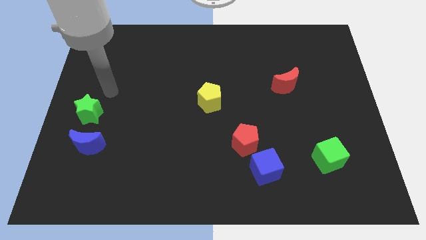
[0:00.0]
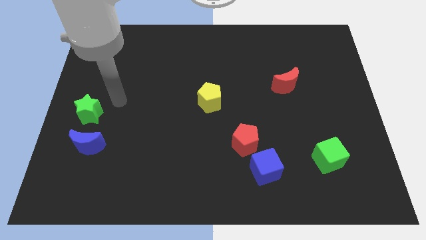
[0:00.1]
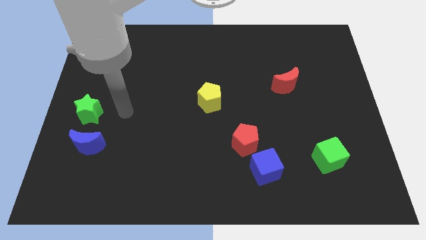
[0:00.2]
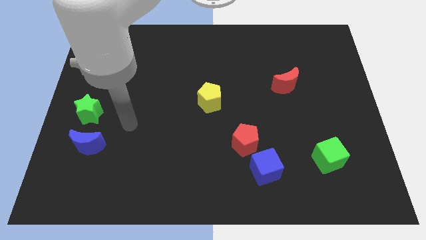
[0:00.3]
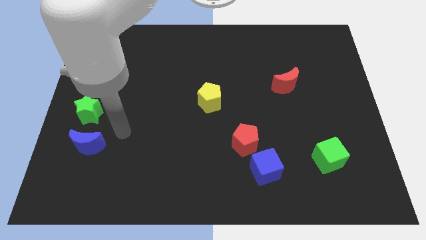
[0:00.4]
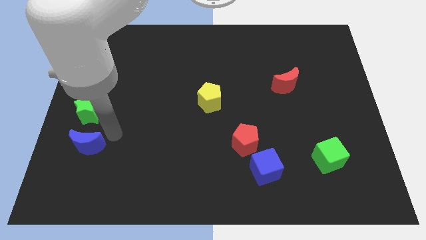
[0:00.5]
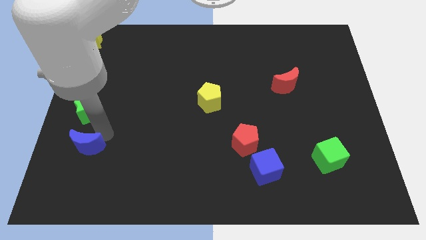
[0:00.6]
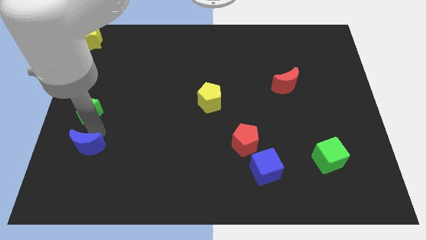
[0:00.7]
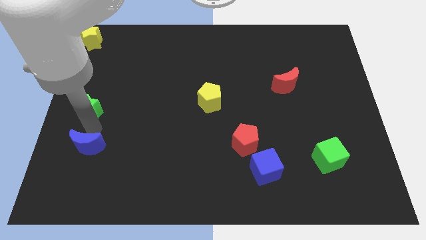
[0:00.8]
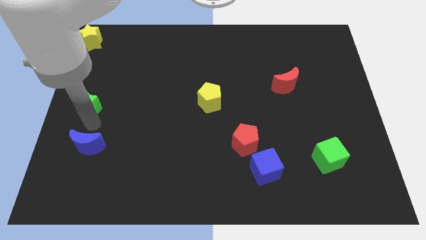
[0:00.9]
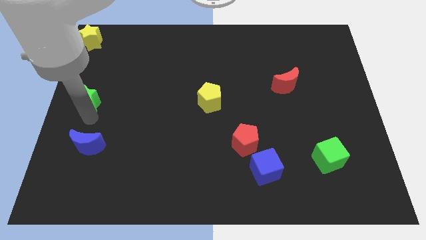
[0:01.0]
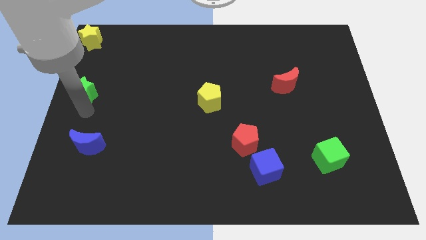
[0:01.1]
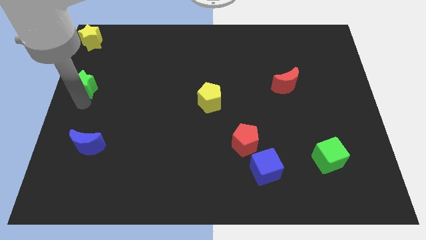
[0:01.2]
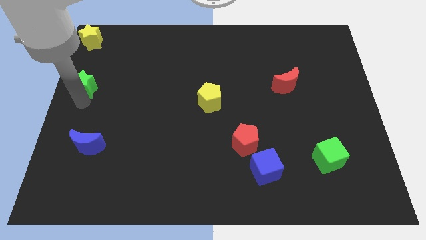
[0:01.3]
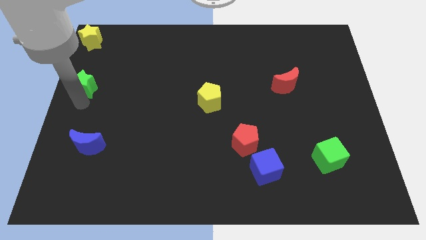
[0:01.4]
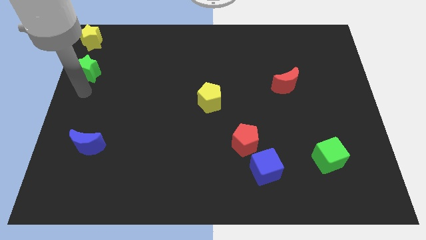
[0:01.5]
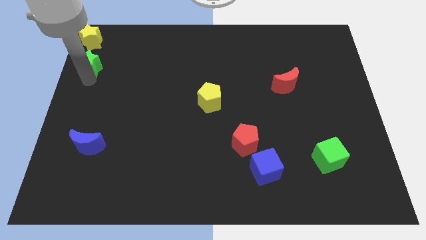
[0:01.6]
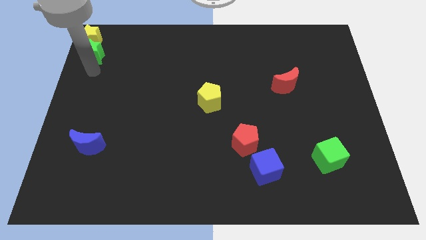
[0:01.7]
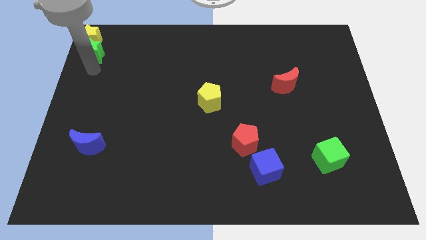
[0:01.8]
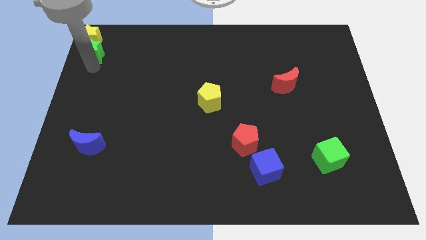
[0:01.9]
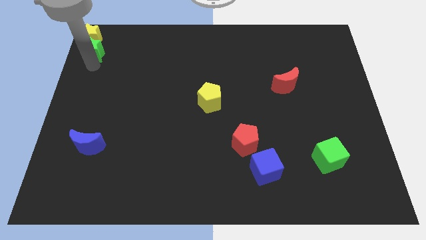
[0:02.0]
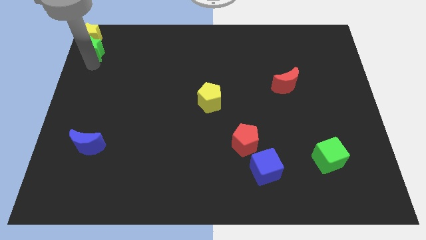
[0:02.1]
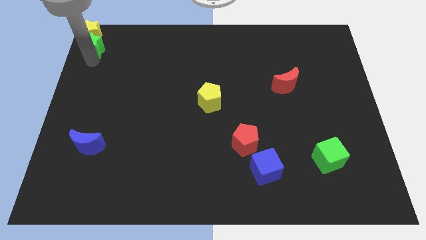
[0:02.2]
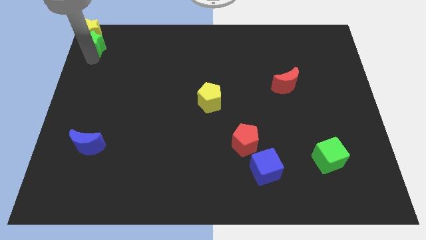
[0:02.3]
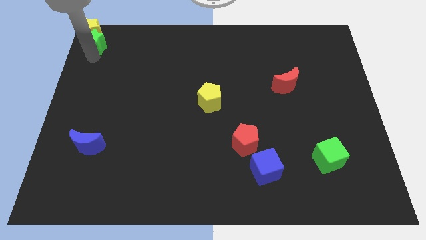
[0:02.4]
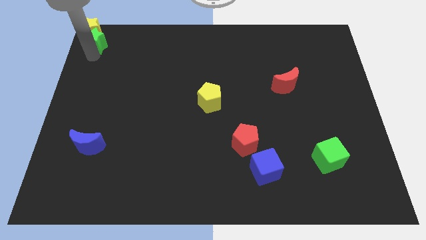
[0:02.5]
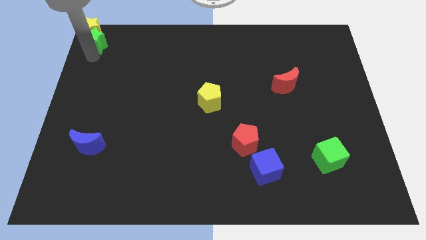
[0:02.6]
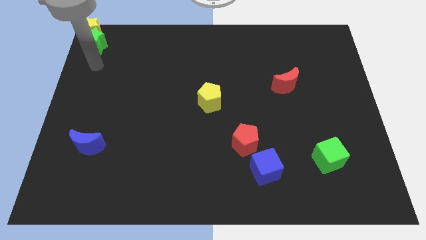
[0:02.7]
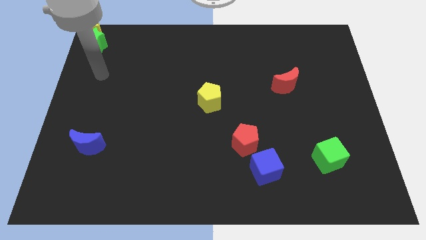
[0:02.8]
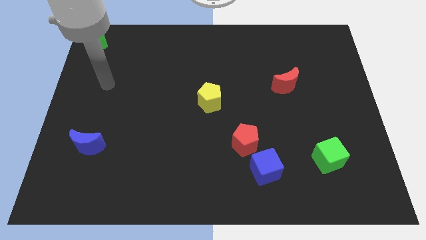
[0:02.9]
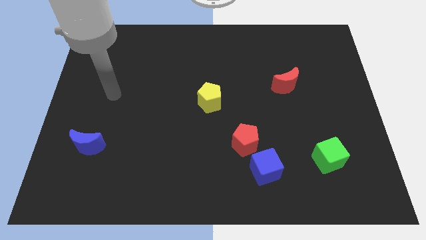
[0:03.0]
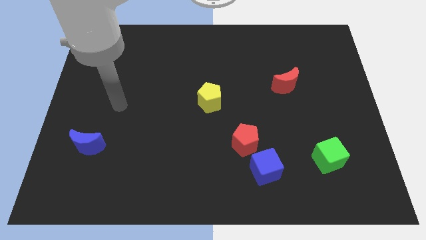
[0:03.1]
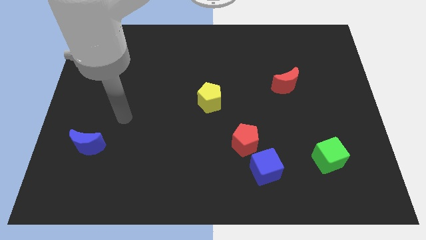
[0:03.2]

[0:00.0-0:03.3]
push the green star to the top left corner

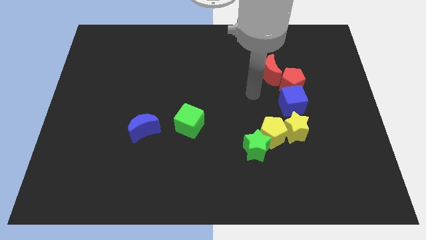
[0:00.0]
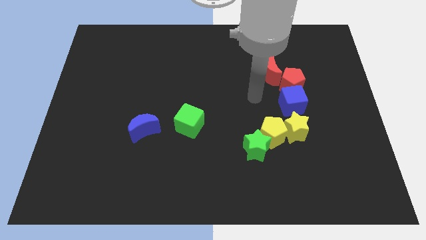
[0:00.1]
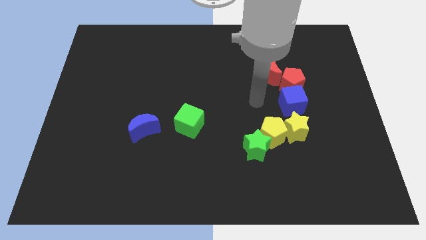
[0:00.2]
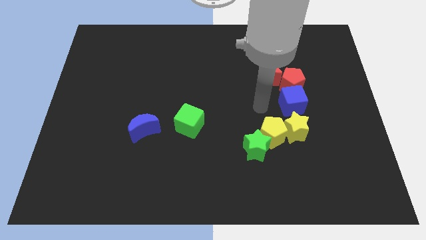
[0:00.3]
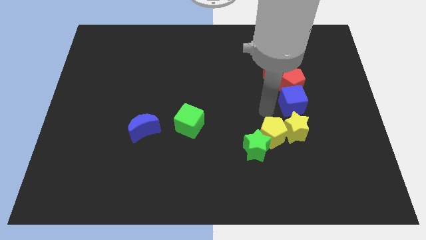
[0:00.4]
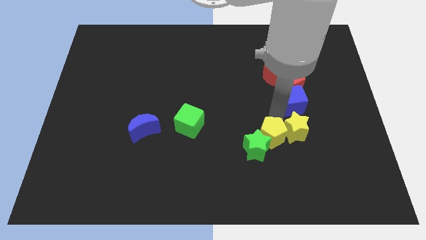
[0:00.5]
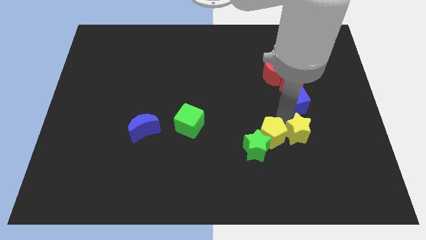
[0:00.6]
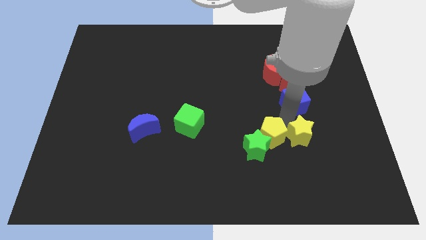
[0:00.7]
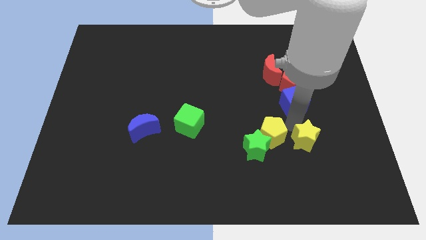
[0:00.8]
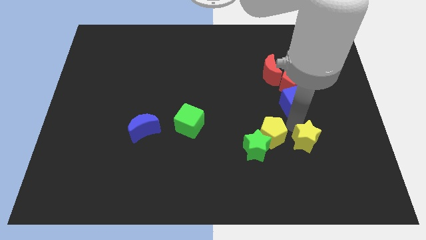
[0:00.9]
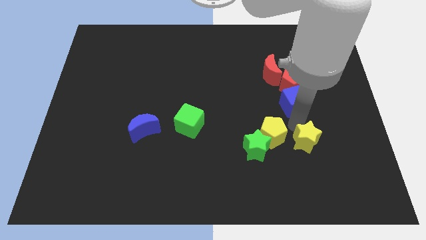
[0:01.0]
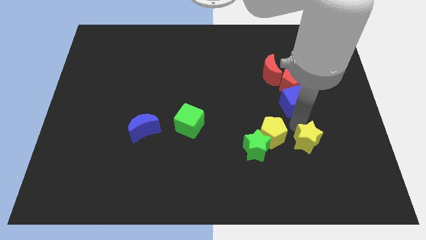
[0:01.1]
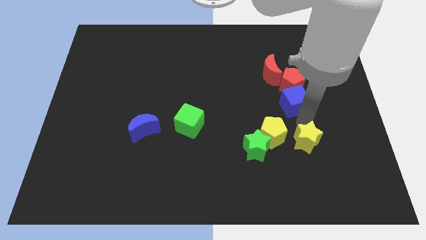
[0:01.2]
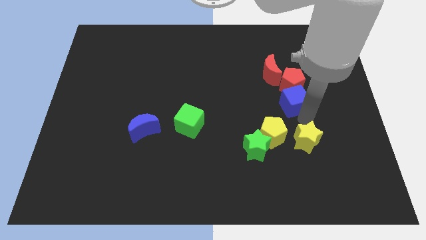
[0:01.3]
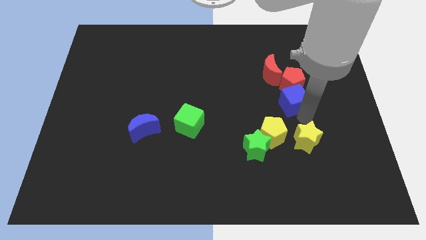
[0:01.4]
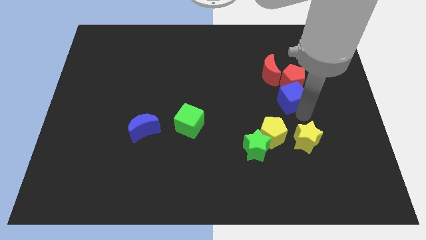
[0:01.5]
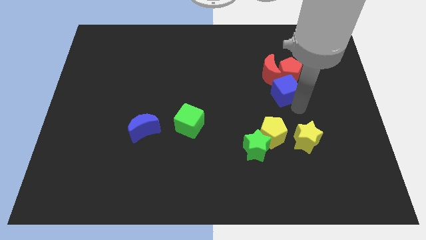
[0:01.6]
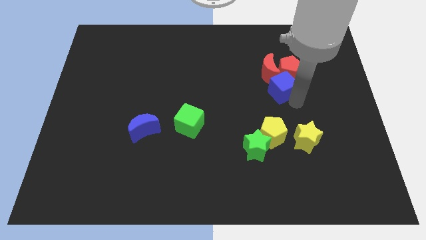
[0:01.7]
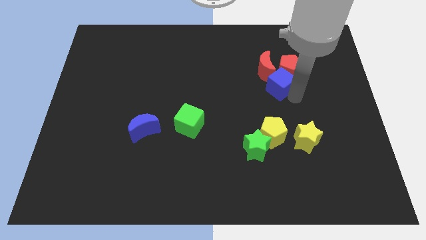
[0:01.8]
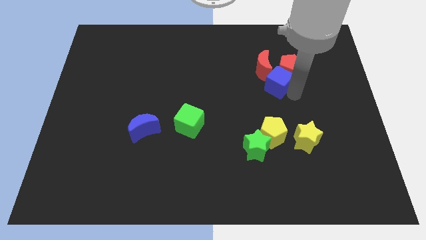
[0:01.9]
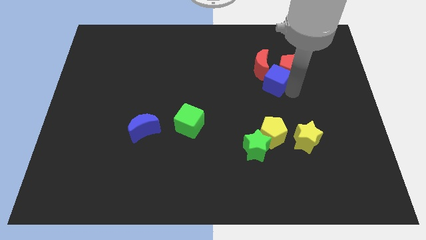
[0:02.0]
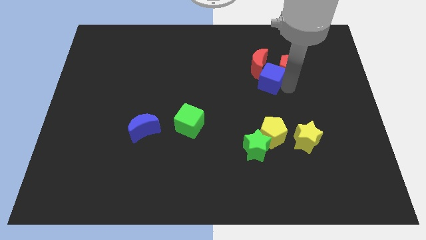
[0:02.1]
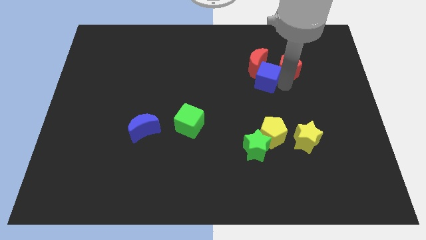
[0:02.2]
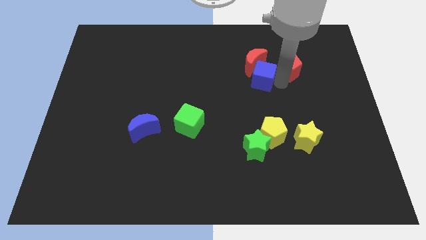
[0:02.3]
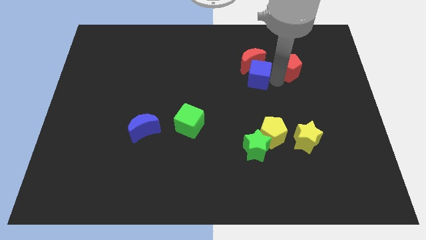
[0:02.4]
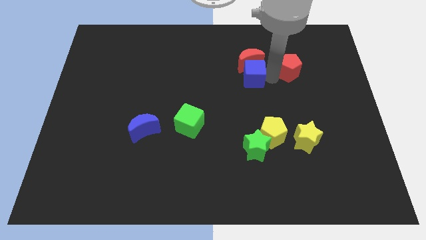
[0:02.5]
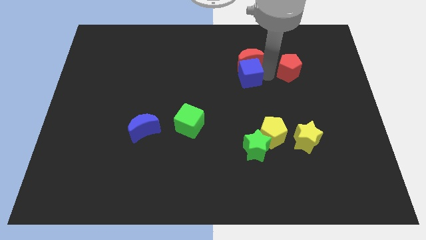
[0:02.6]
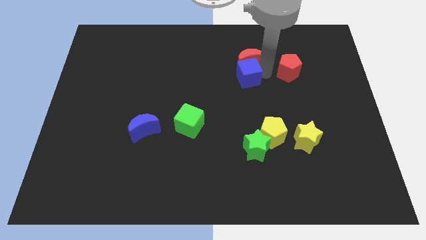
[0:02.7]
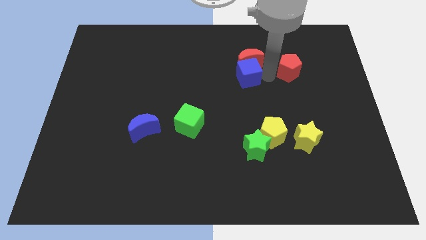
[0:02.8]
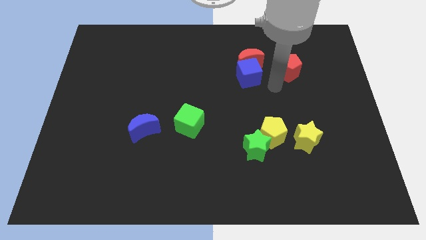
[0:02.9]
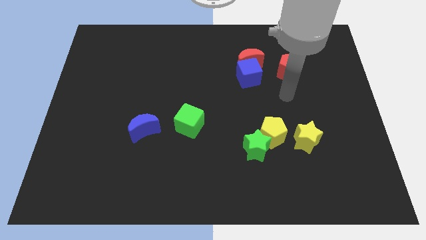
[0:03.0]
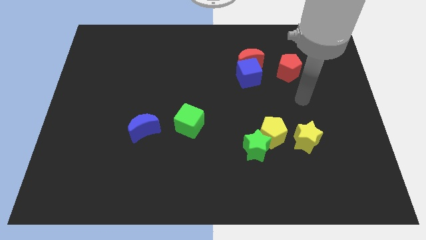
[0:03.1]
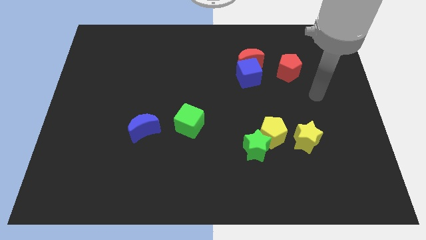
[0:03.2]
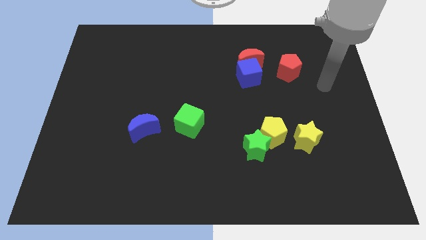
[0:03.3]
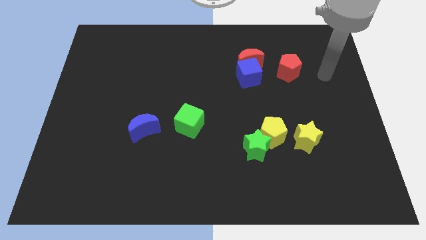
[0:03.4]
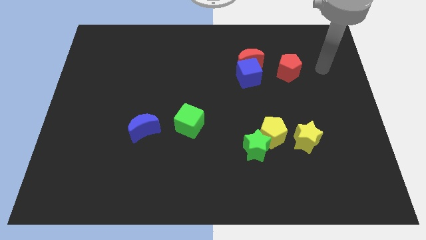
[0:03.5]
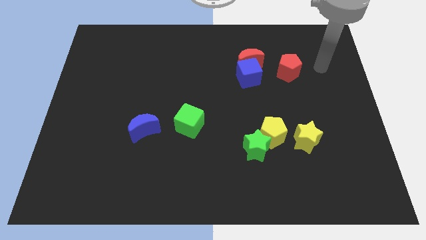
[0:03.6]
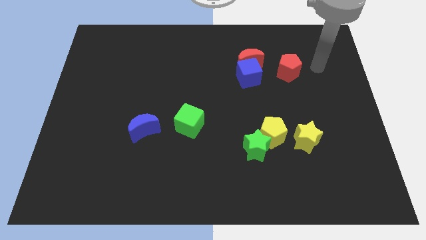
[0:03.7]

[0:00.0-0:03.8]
move the blue cube below the red moon

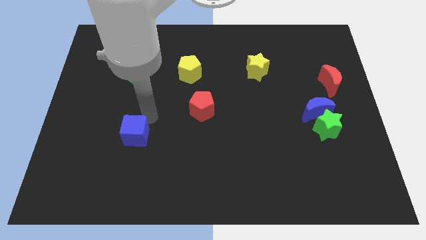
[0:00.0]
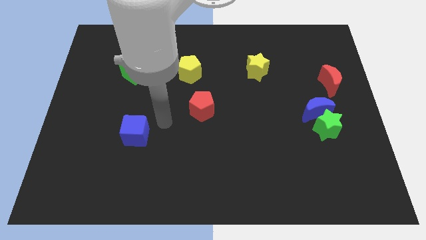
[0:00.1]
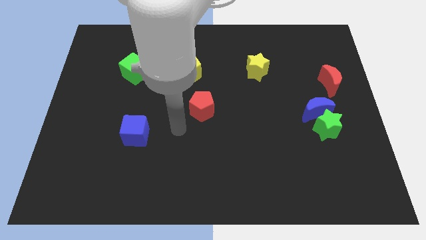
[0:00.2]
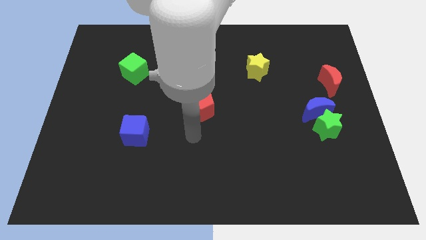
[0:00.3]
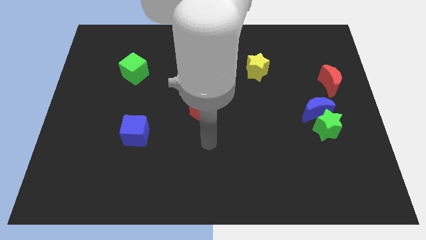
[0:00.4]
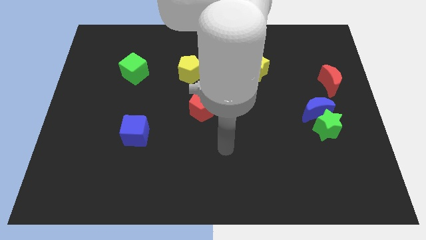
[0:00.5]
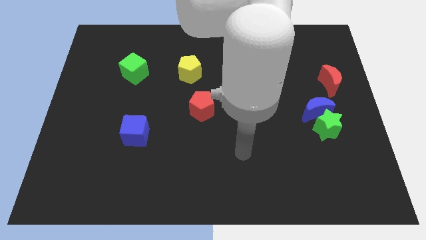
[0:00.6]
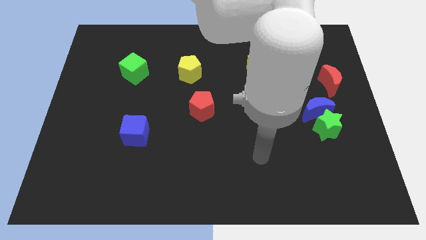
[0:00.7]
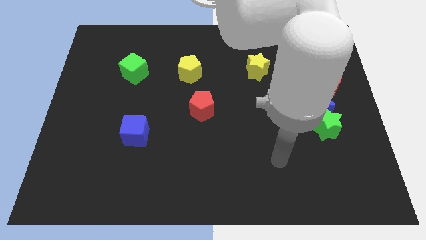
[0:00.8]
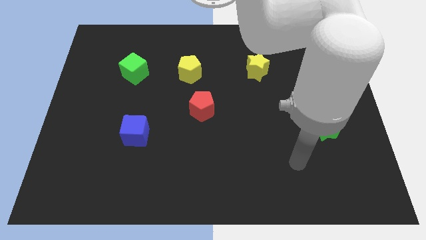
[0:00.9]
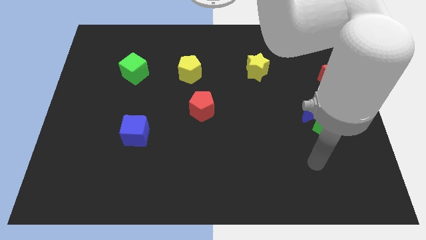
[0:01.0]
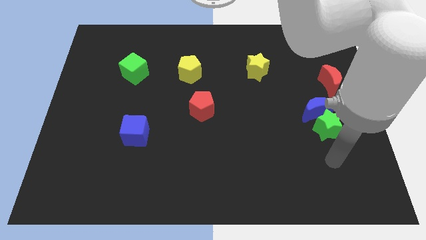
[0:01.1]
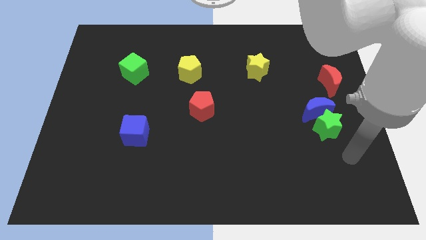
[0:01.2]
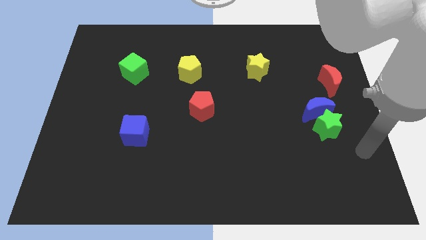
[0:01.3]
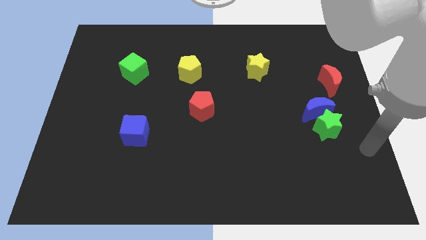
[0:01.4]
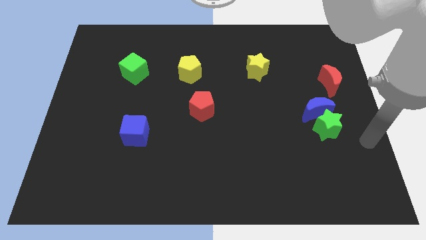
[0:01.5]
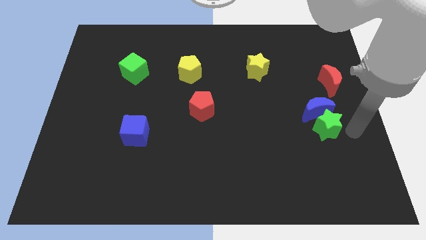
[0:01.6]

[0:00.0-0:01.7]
move your arm towards the right of the green star
